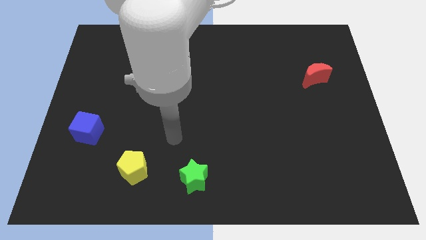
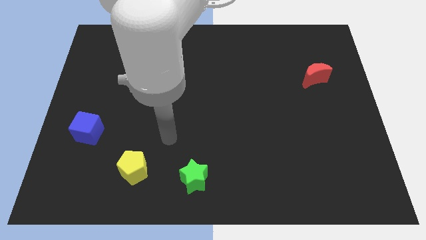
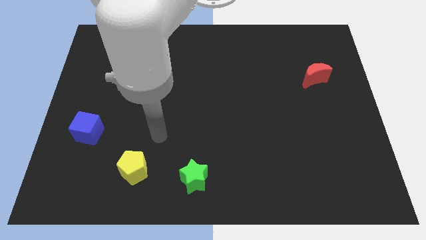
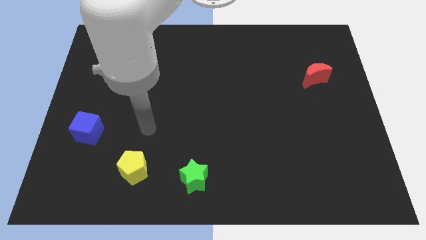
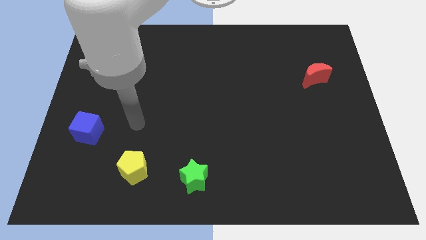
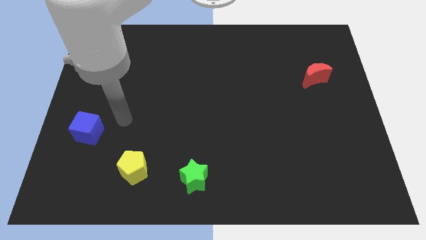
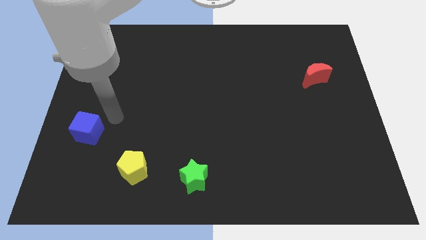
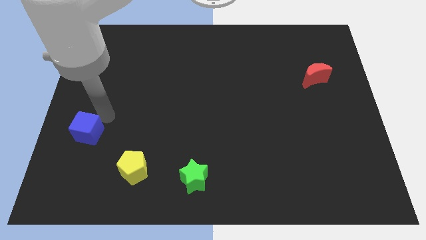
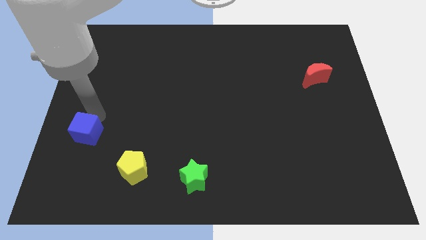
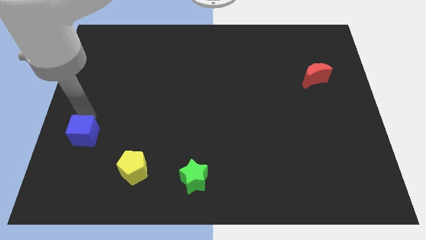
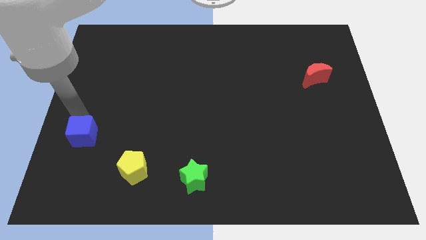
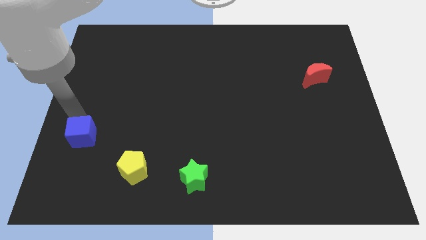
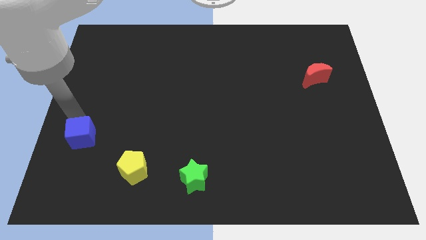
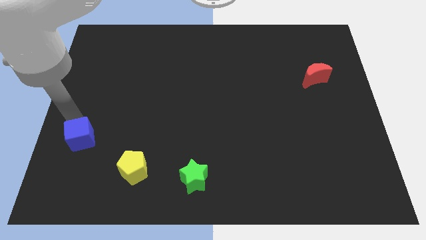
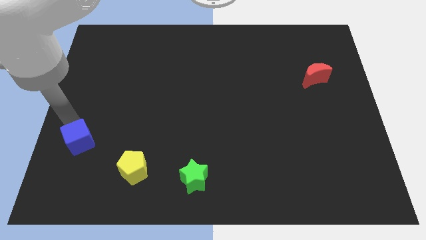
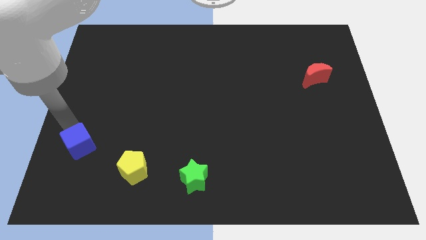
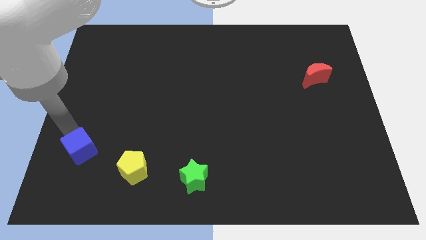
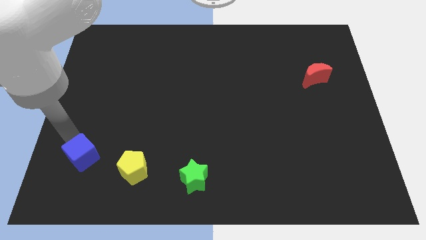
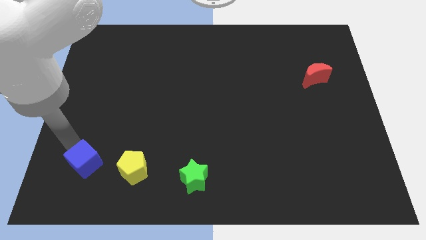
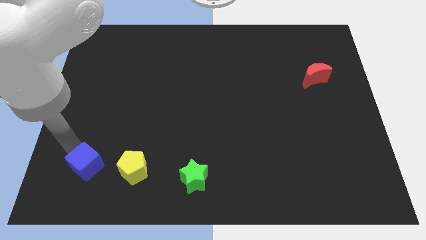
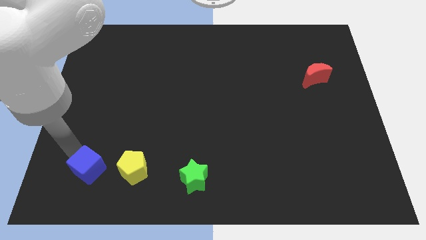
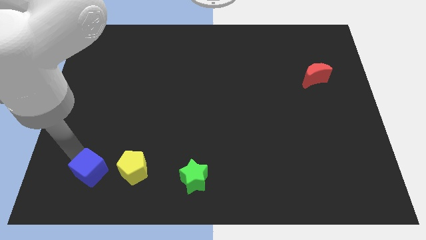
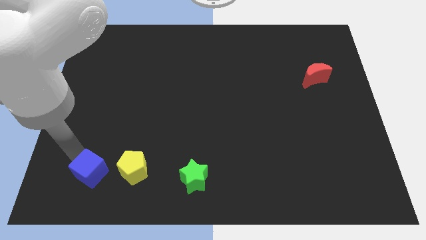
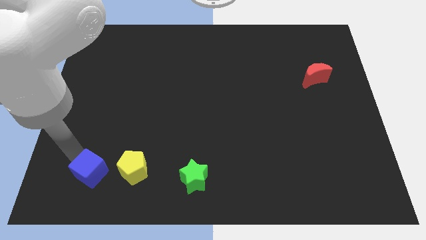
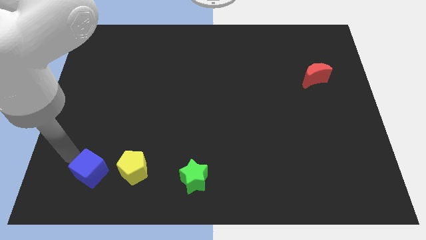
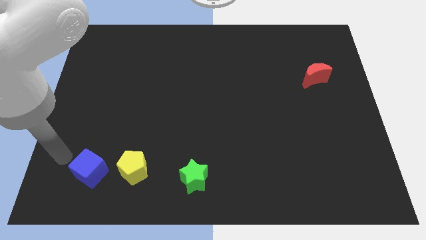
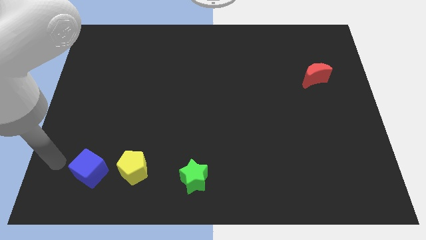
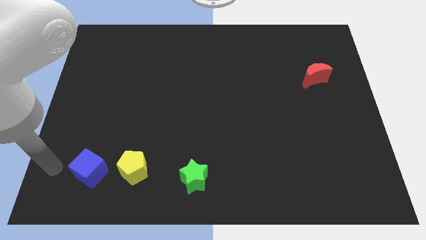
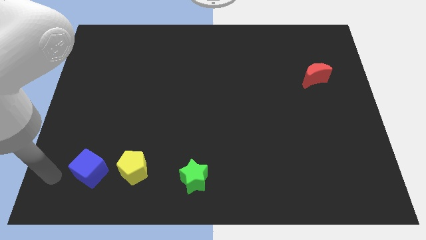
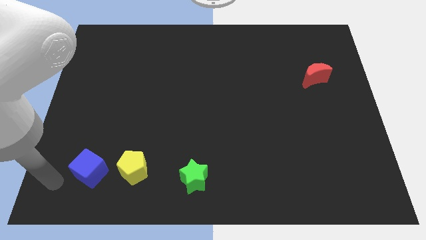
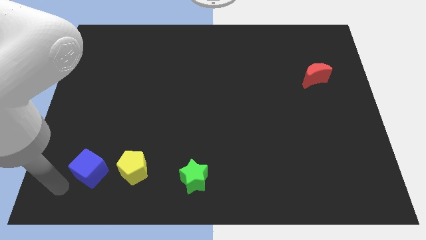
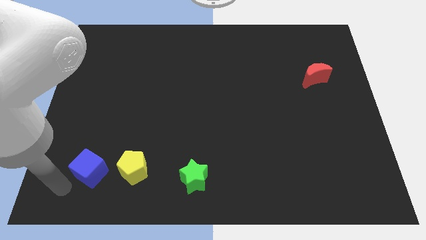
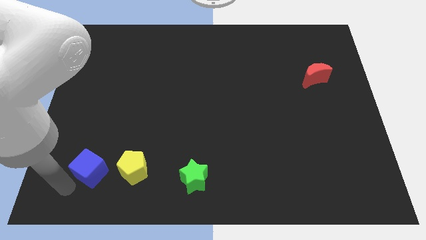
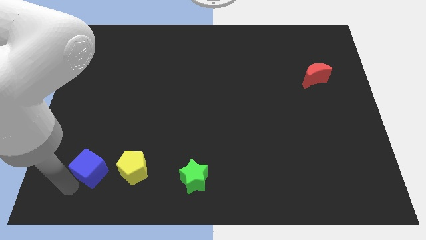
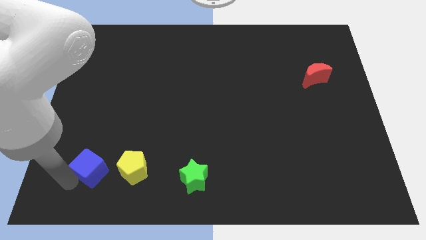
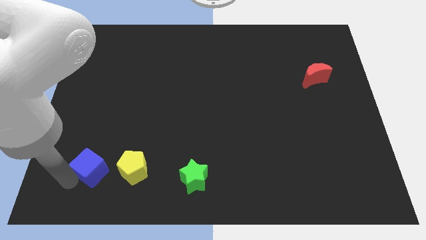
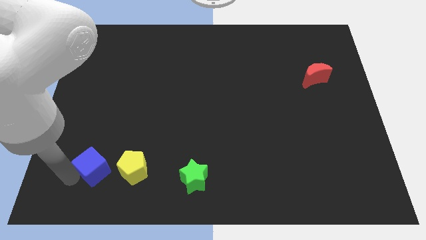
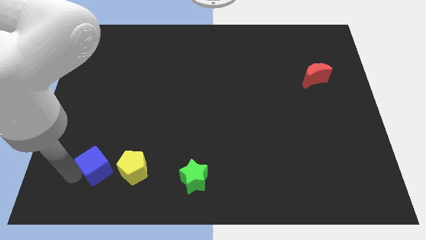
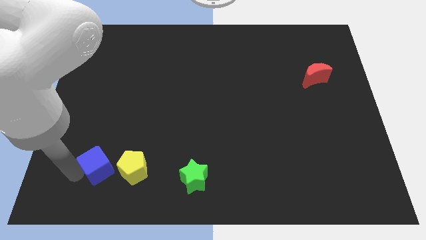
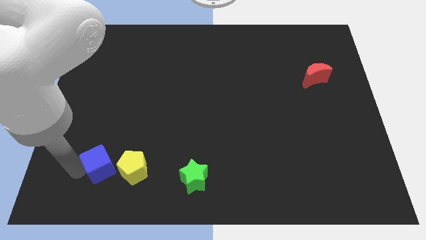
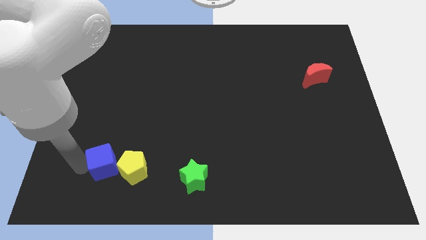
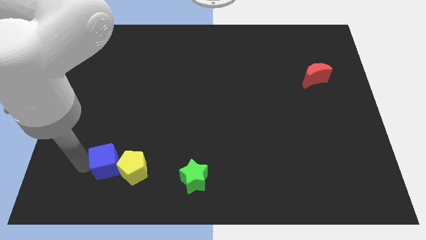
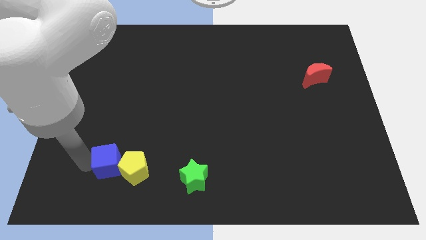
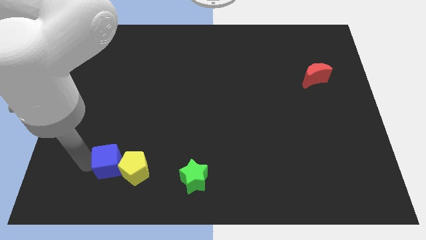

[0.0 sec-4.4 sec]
put the blue block towards the pentagon

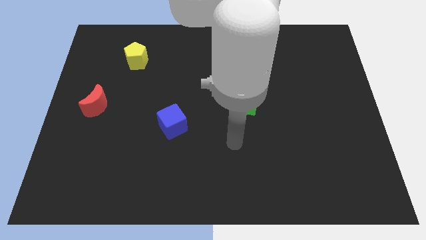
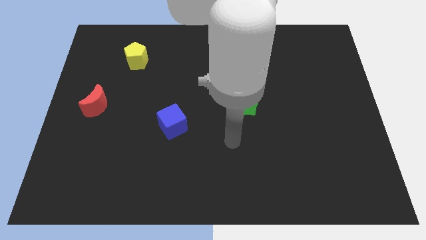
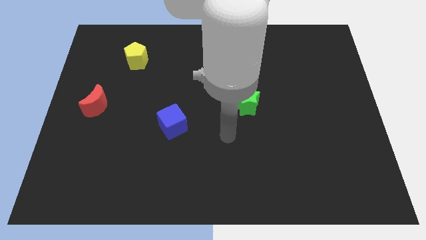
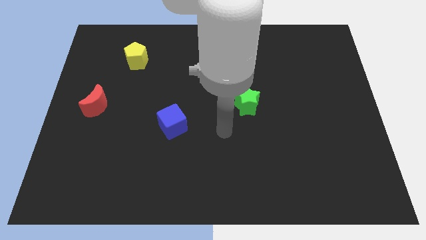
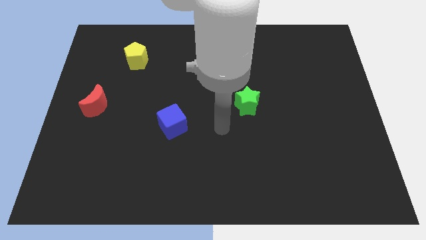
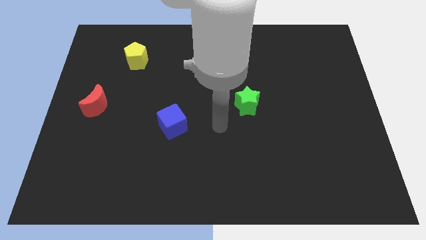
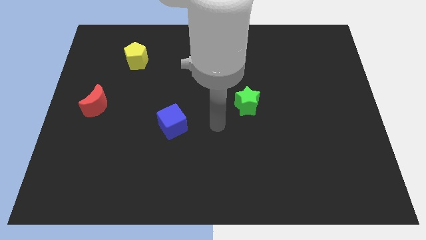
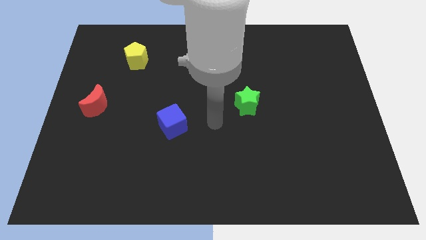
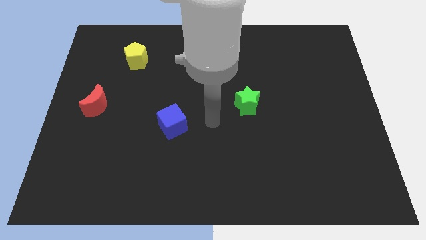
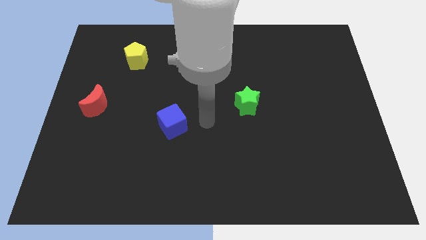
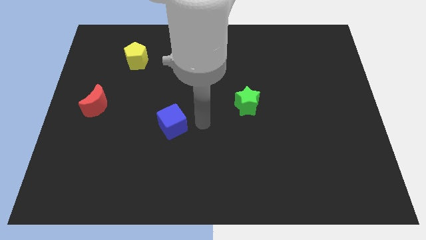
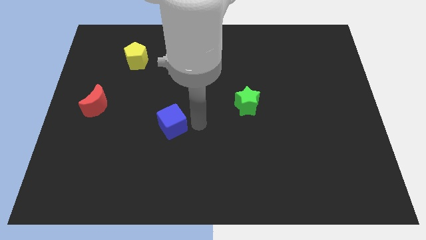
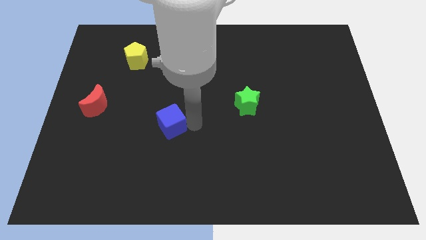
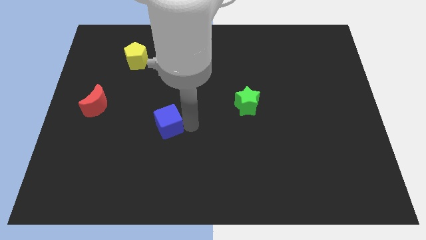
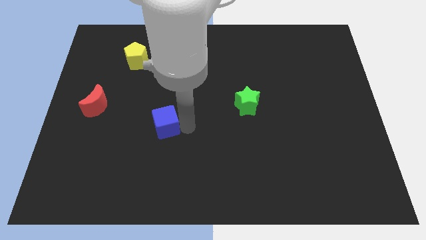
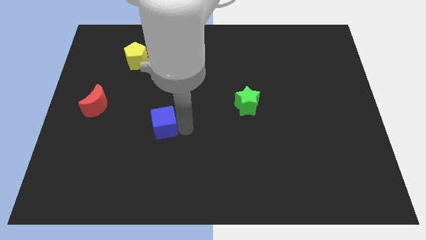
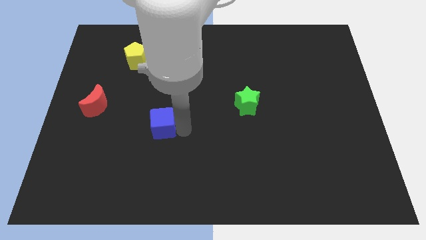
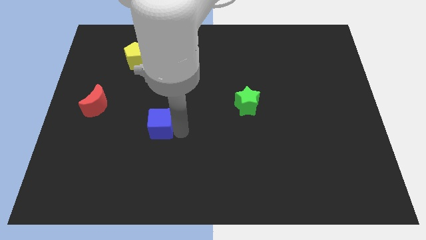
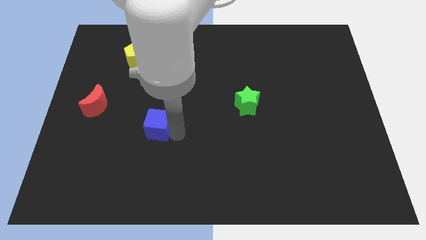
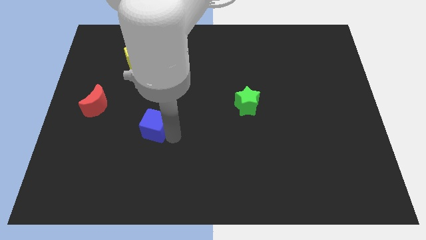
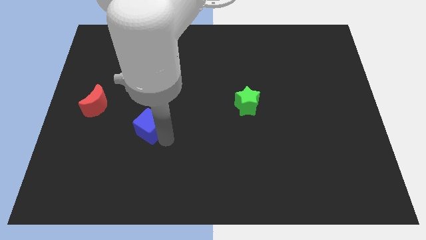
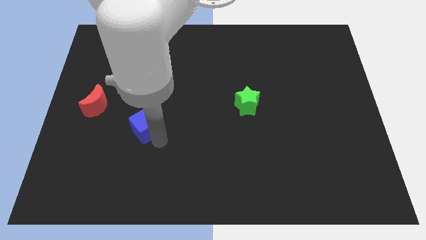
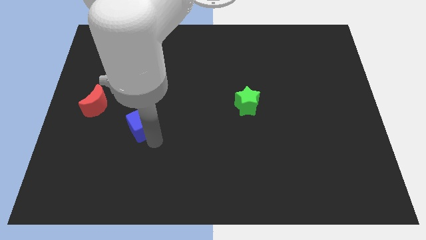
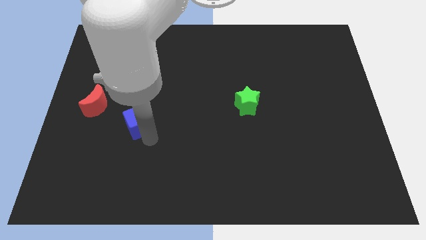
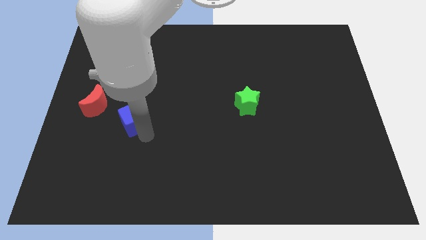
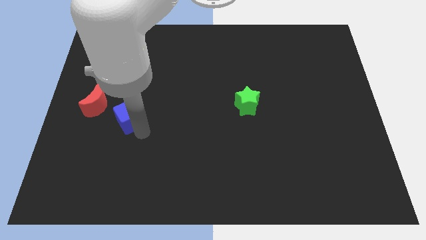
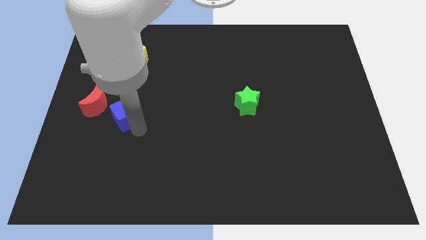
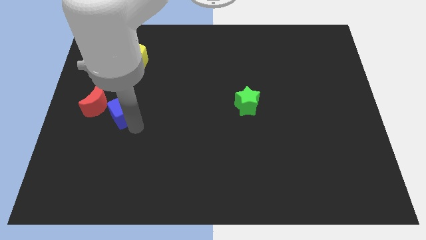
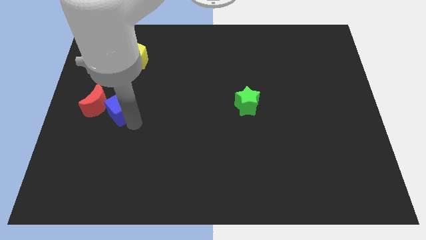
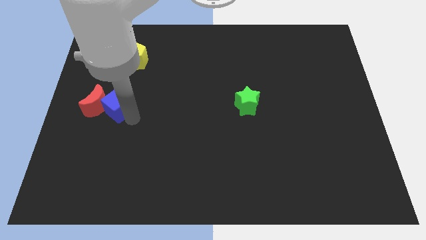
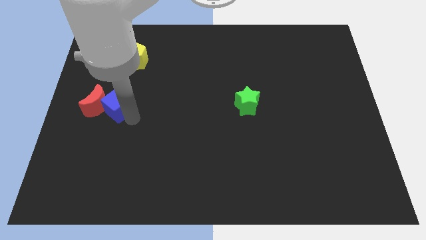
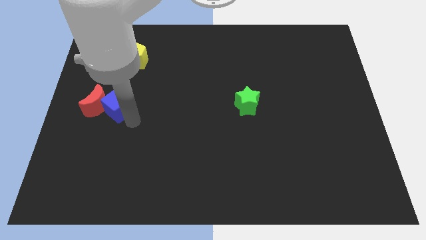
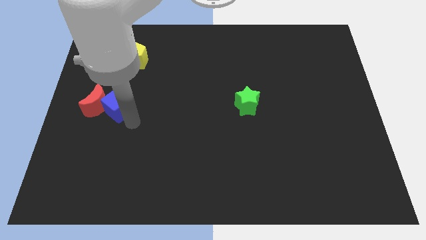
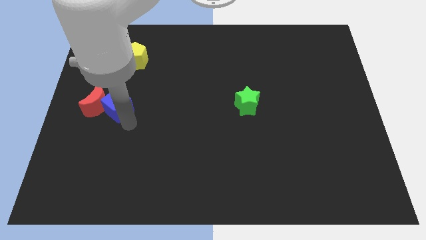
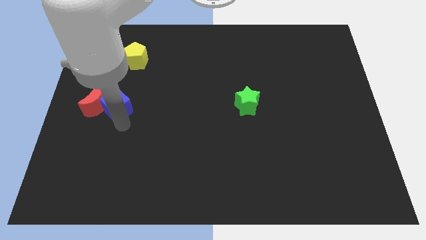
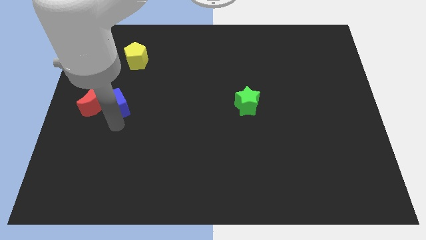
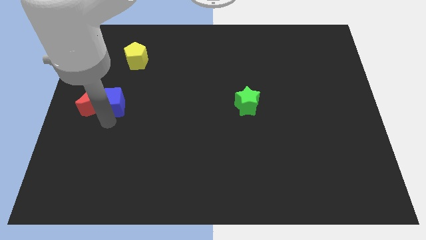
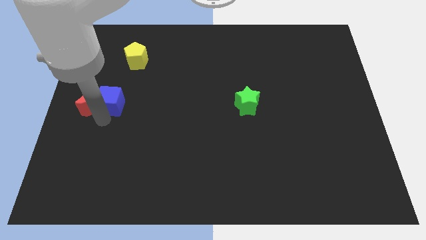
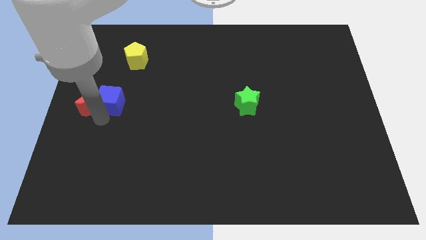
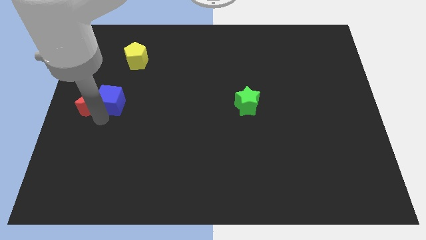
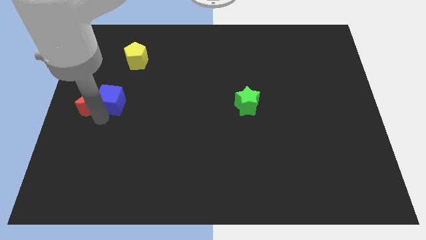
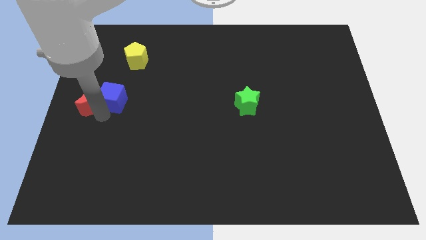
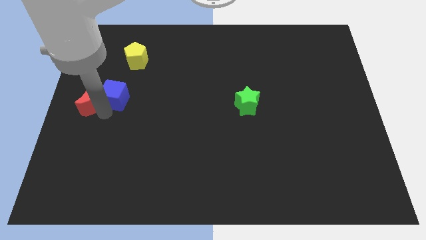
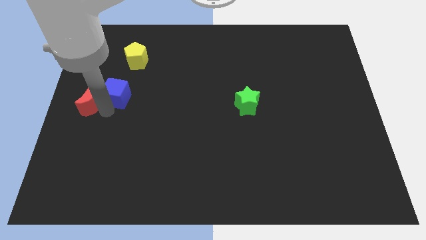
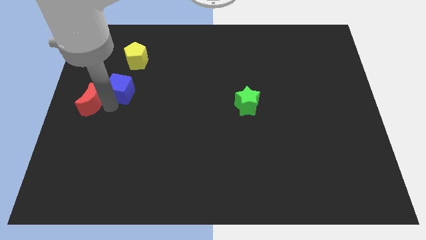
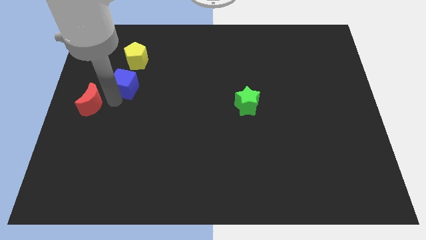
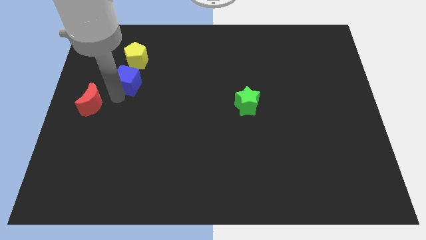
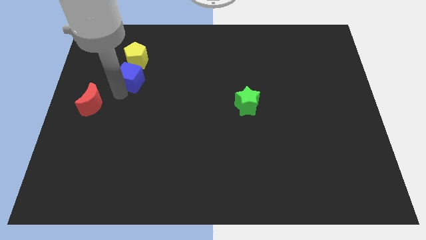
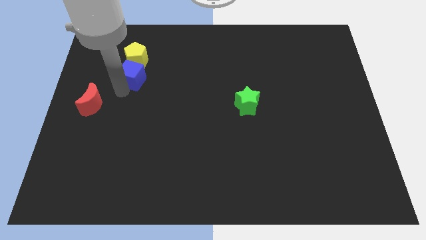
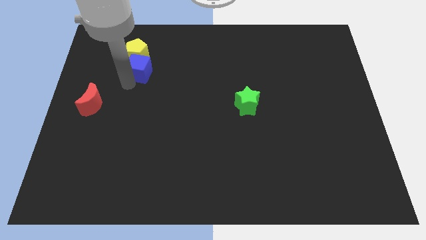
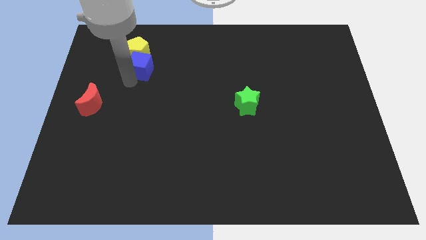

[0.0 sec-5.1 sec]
move the blue cube close to the yellow pentagon
